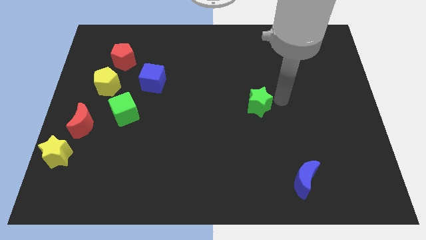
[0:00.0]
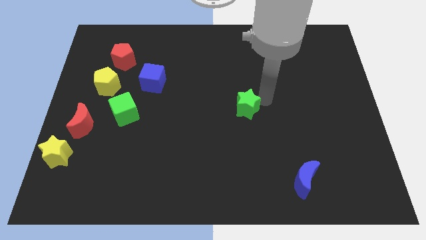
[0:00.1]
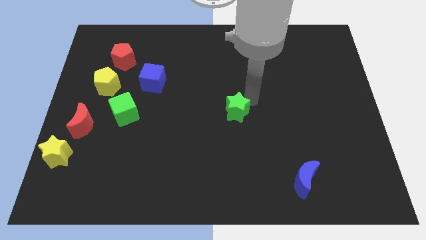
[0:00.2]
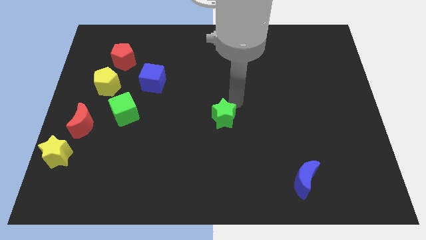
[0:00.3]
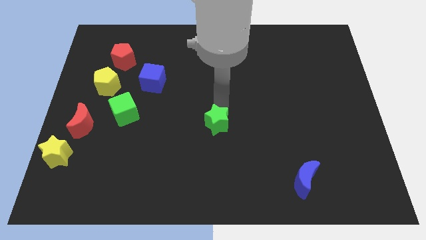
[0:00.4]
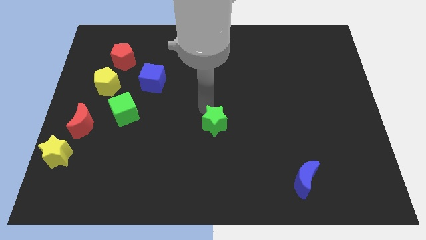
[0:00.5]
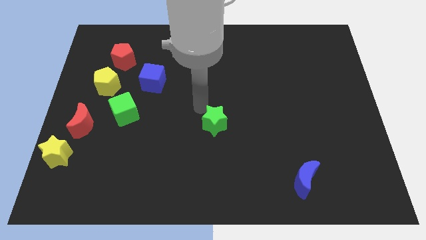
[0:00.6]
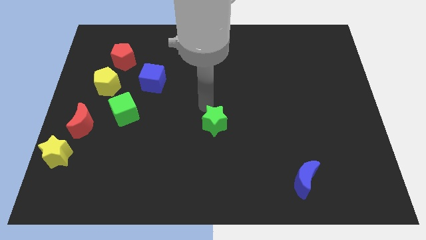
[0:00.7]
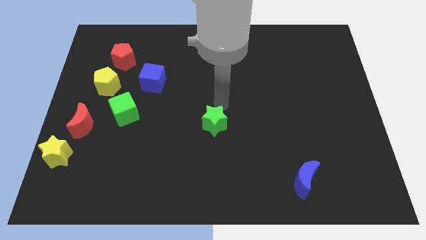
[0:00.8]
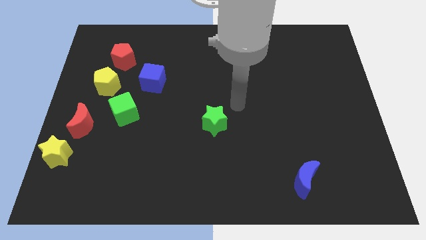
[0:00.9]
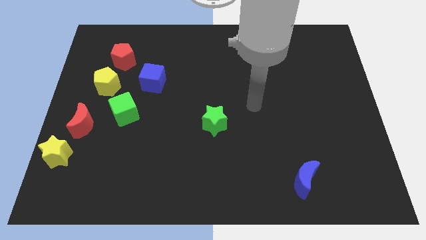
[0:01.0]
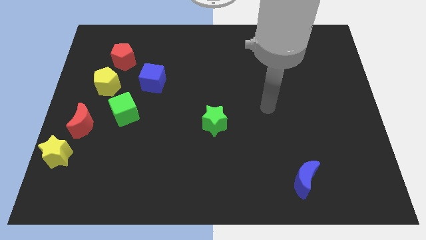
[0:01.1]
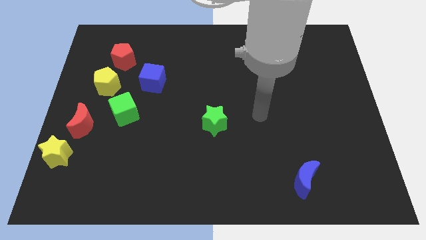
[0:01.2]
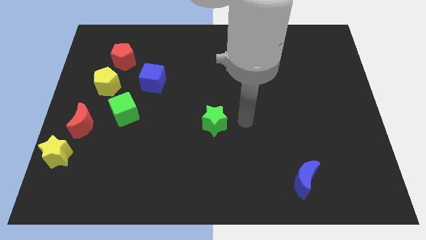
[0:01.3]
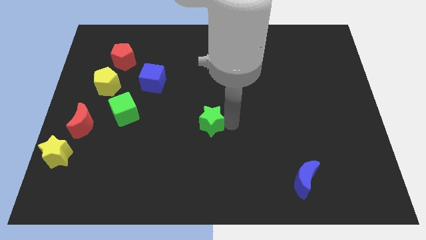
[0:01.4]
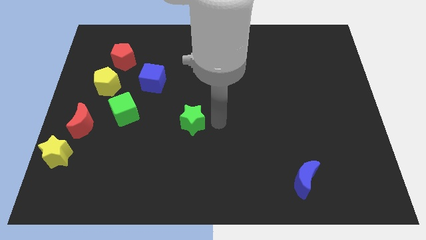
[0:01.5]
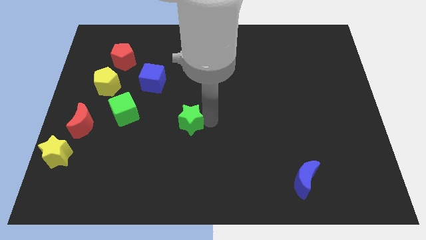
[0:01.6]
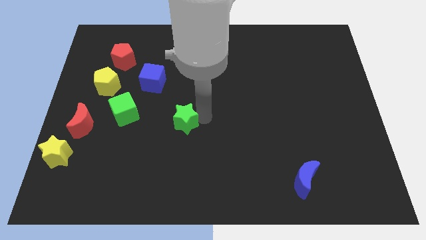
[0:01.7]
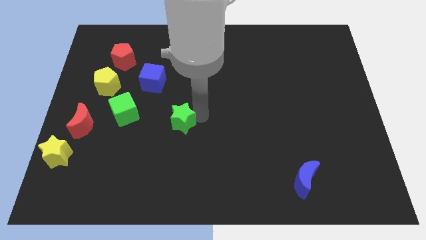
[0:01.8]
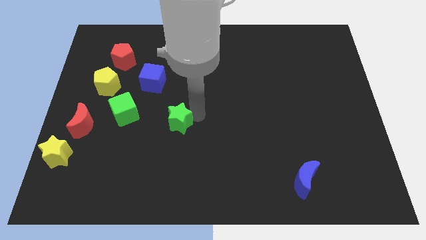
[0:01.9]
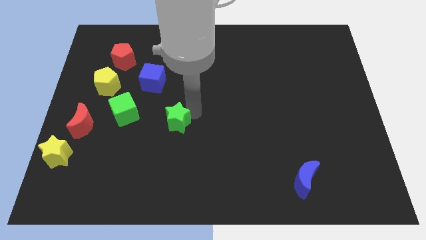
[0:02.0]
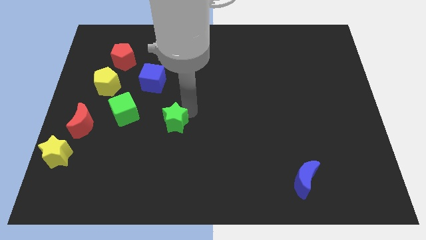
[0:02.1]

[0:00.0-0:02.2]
slide the green star towards the right side of the green cube

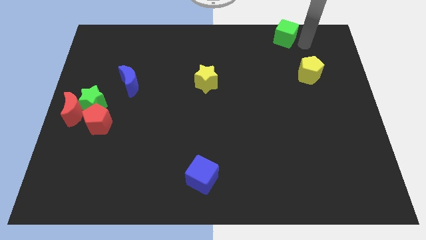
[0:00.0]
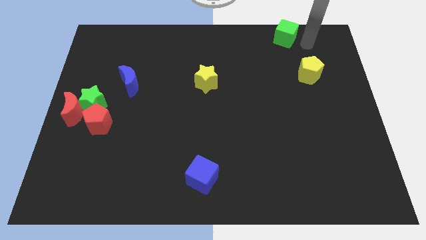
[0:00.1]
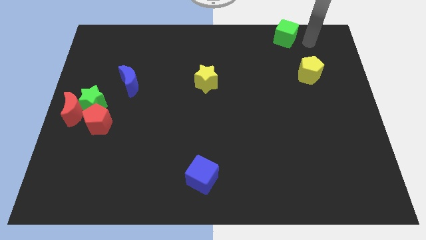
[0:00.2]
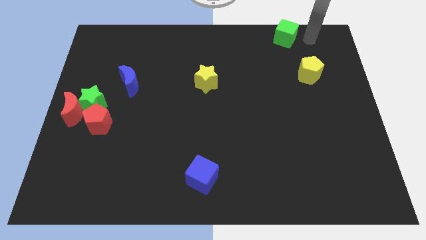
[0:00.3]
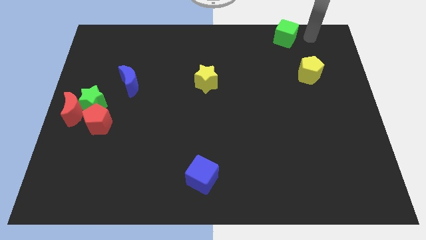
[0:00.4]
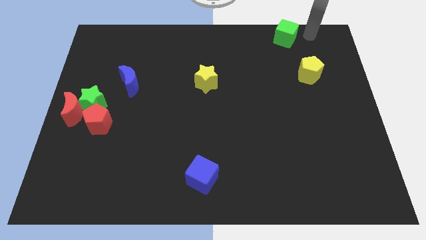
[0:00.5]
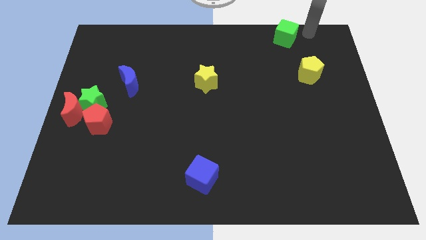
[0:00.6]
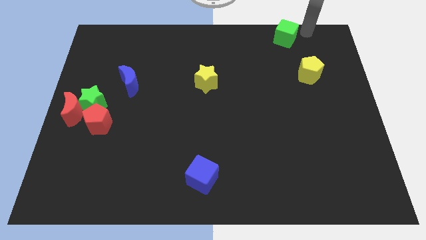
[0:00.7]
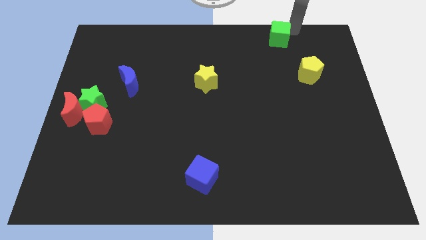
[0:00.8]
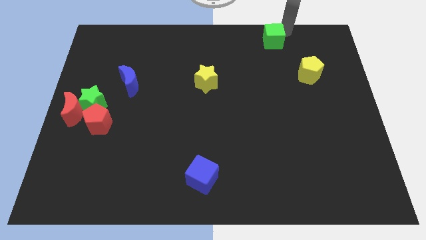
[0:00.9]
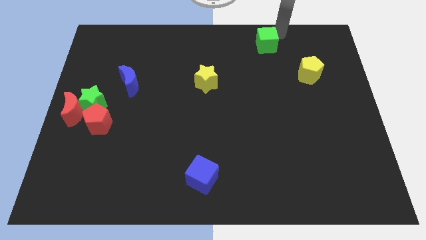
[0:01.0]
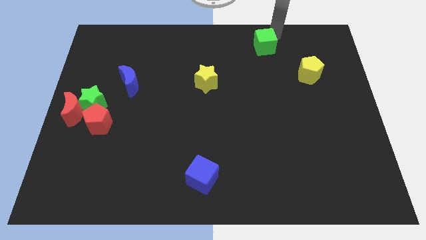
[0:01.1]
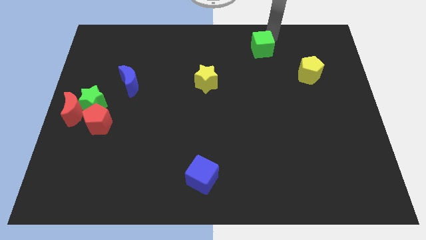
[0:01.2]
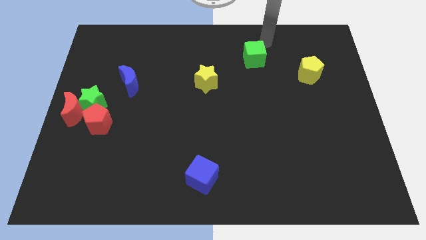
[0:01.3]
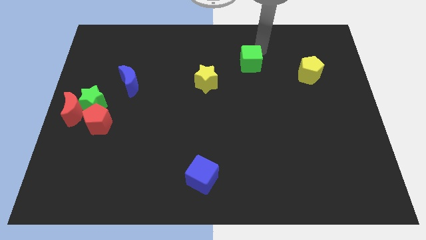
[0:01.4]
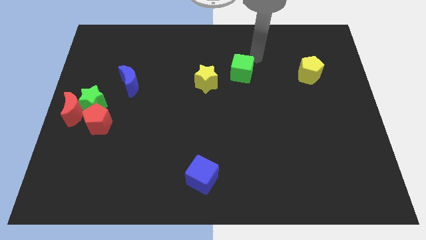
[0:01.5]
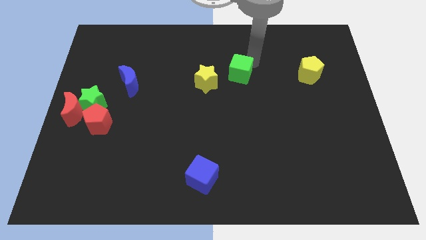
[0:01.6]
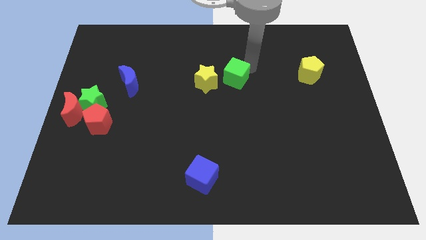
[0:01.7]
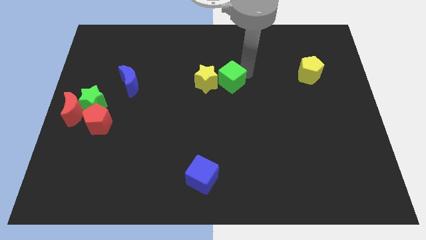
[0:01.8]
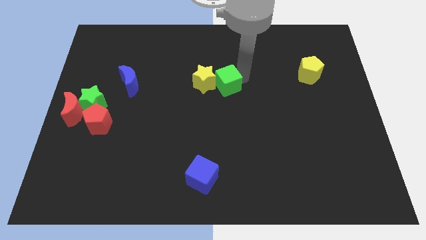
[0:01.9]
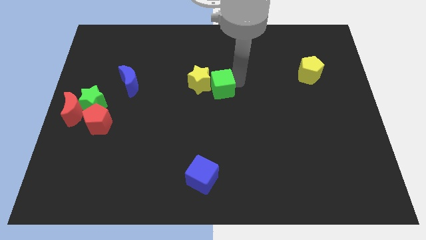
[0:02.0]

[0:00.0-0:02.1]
slide green cube to the right of yellow star

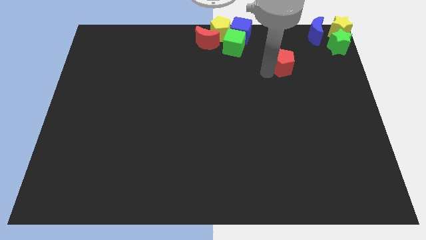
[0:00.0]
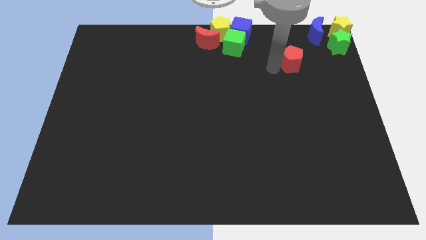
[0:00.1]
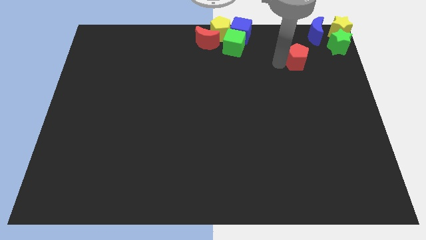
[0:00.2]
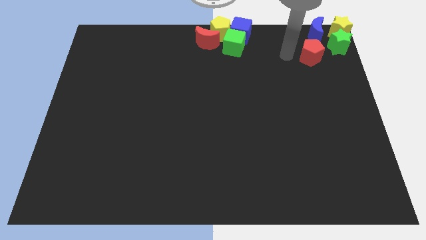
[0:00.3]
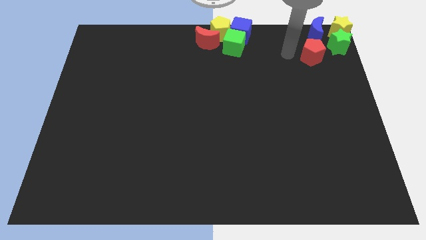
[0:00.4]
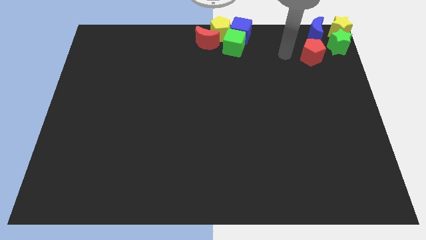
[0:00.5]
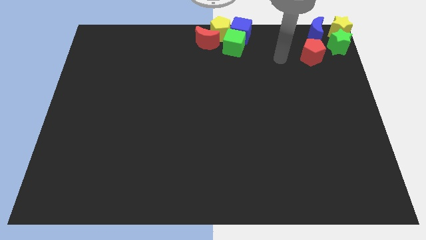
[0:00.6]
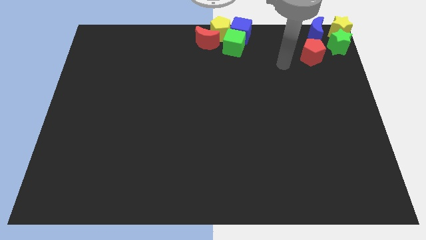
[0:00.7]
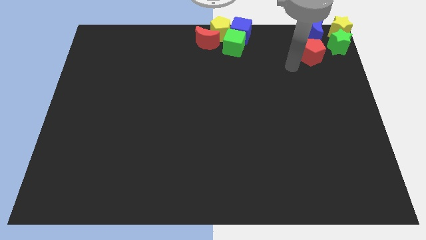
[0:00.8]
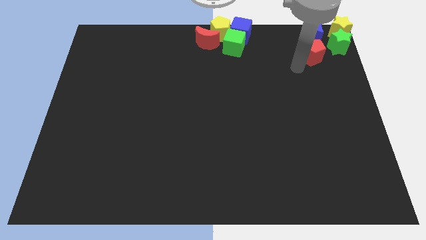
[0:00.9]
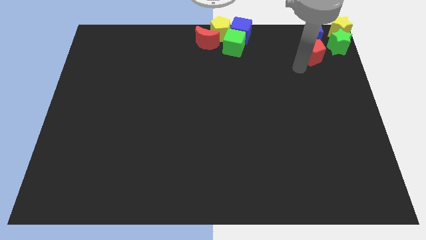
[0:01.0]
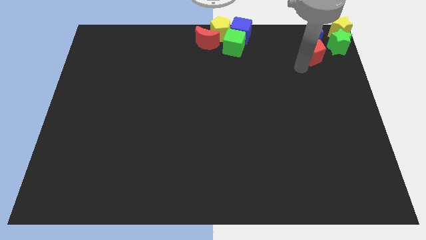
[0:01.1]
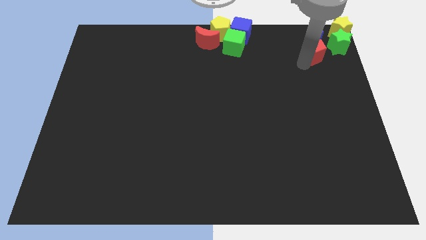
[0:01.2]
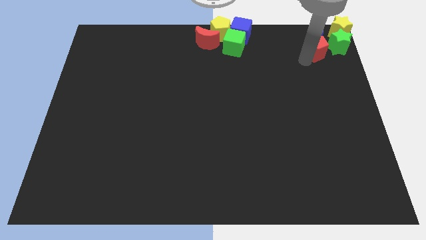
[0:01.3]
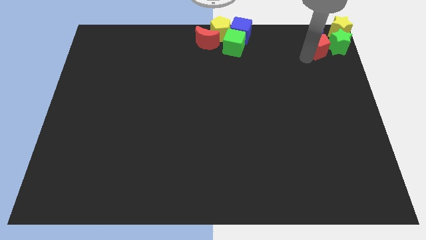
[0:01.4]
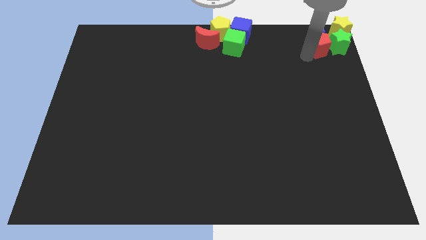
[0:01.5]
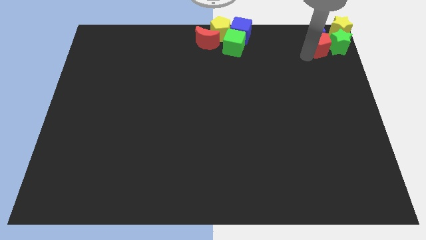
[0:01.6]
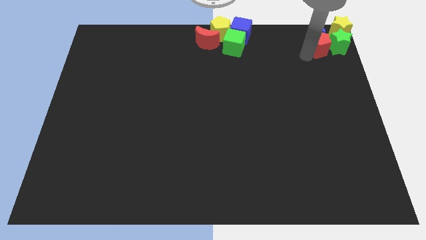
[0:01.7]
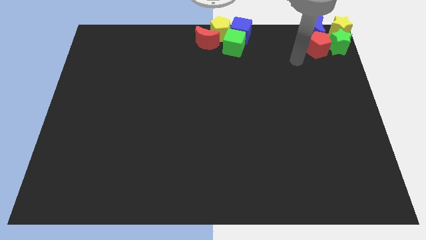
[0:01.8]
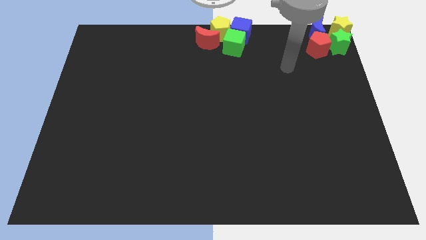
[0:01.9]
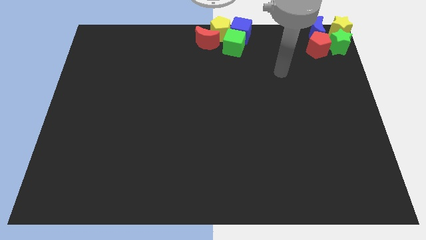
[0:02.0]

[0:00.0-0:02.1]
push the red pentagon into the blue moon

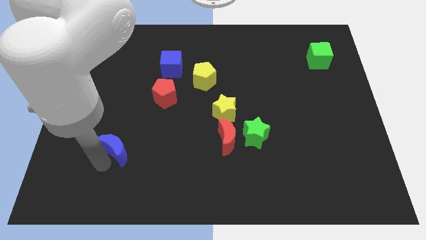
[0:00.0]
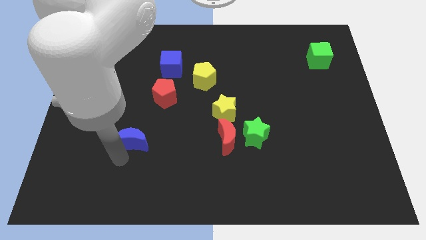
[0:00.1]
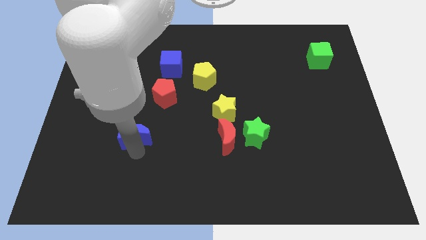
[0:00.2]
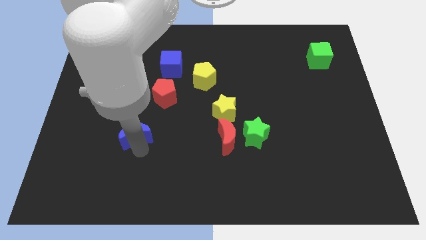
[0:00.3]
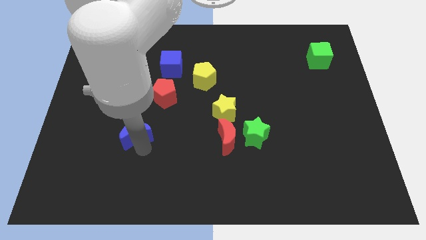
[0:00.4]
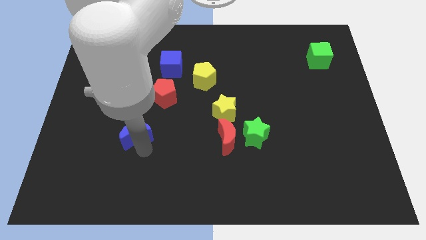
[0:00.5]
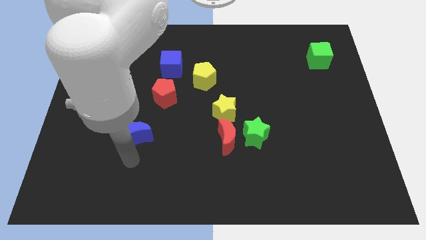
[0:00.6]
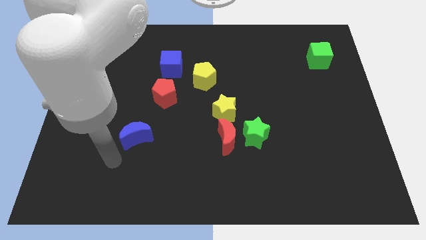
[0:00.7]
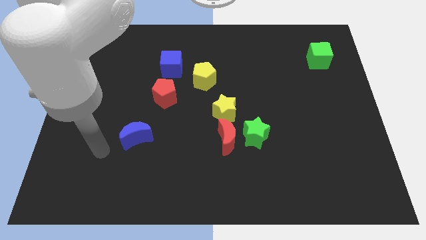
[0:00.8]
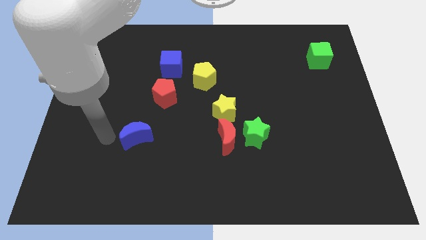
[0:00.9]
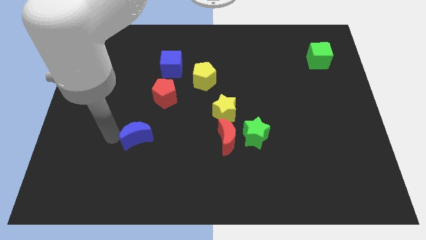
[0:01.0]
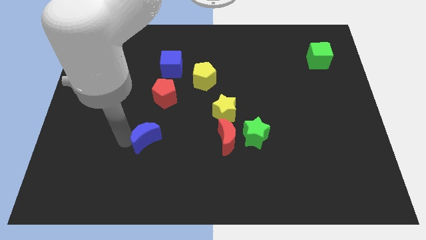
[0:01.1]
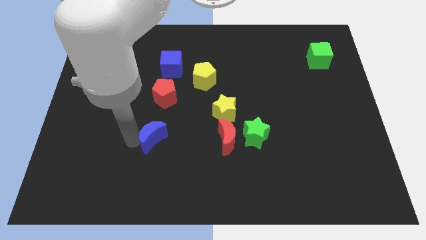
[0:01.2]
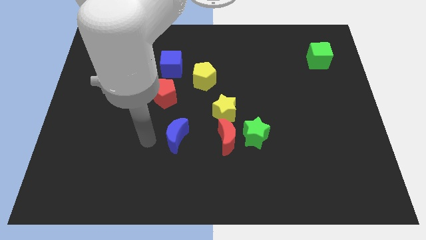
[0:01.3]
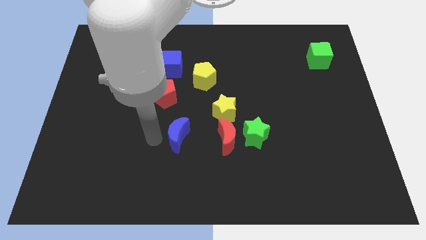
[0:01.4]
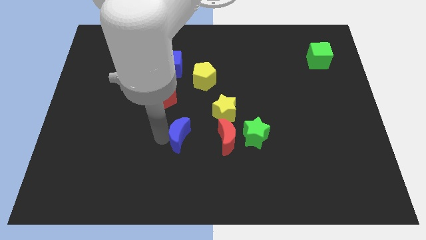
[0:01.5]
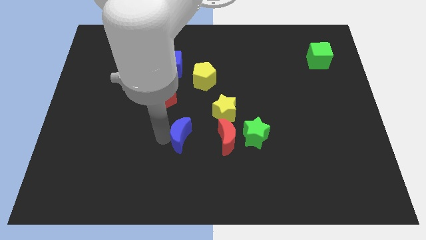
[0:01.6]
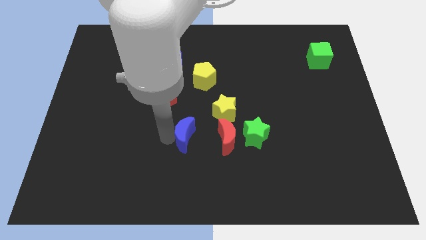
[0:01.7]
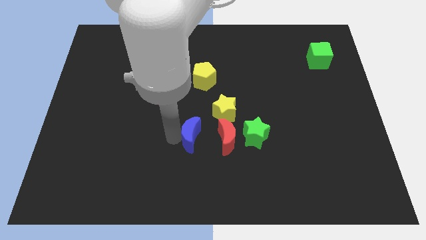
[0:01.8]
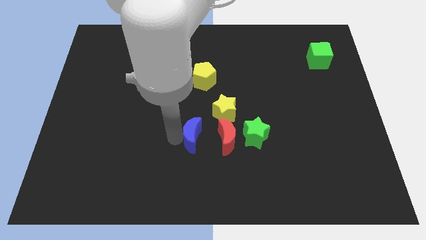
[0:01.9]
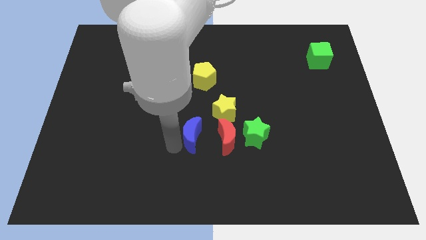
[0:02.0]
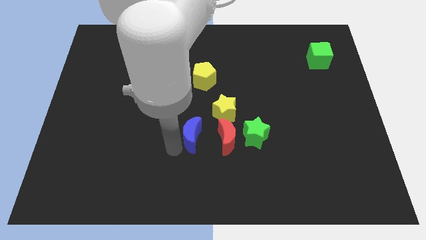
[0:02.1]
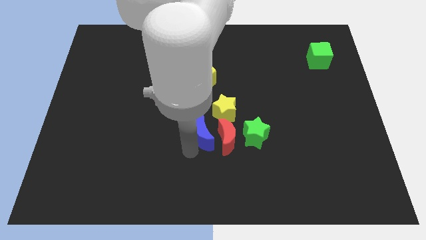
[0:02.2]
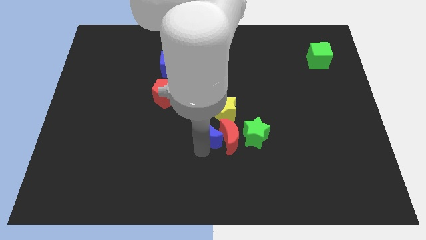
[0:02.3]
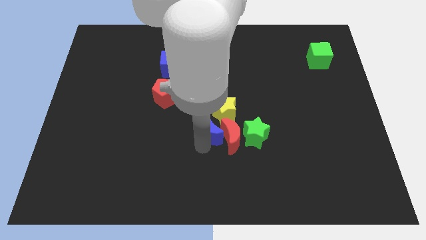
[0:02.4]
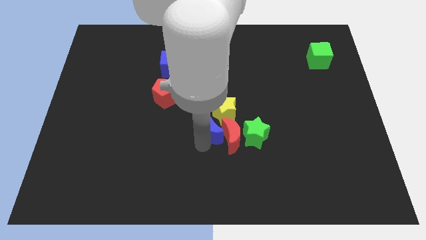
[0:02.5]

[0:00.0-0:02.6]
push the blue crescent to the group of blocks
